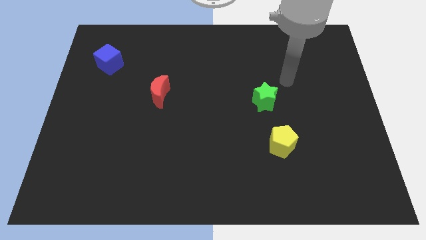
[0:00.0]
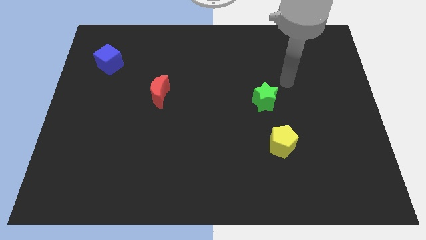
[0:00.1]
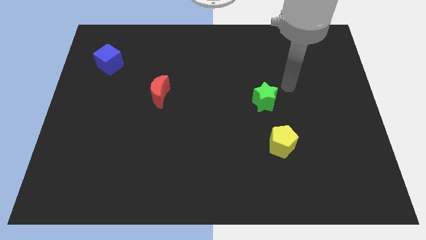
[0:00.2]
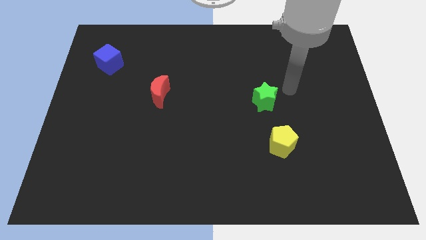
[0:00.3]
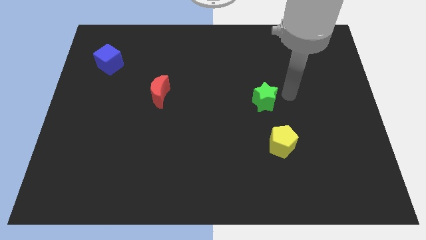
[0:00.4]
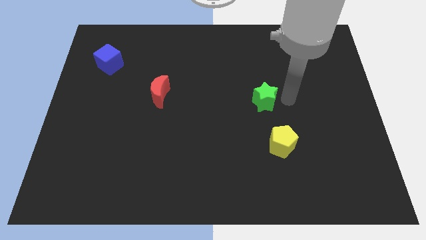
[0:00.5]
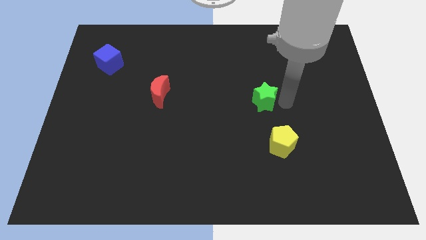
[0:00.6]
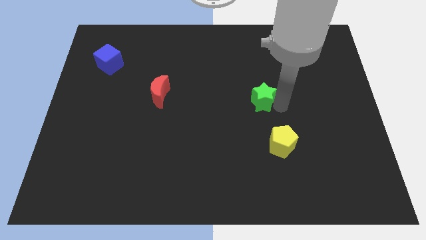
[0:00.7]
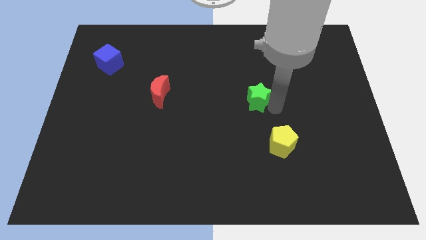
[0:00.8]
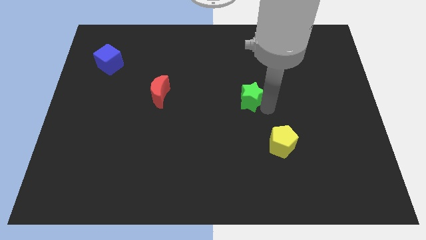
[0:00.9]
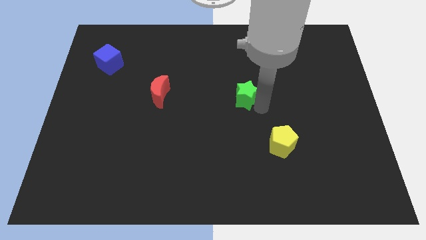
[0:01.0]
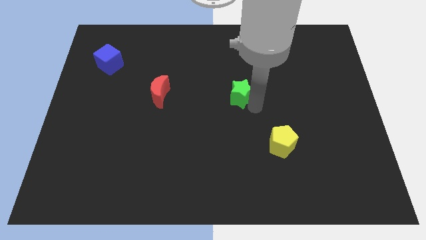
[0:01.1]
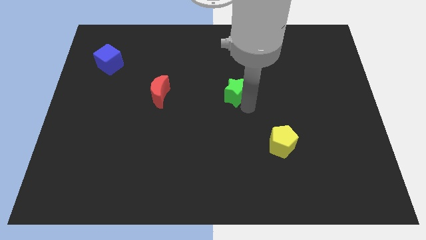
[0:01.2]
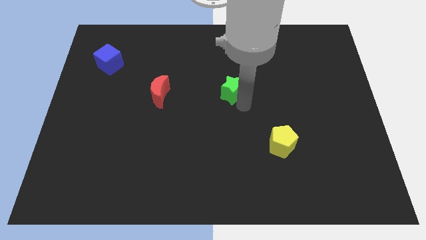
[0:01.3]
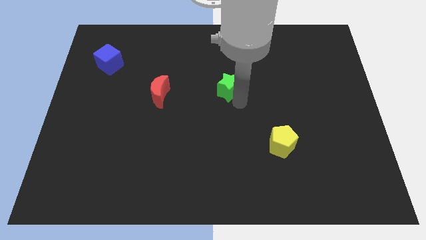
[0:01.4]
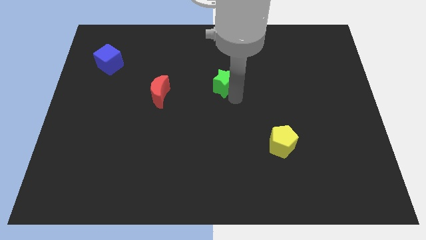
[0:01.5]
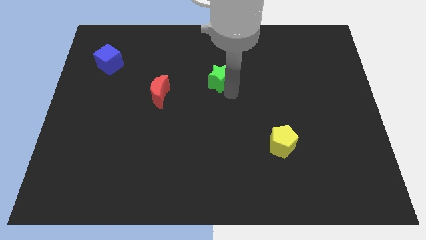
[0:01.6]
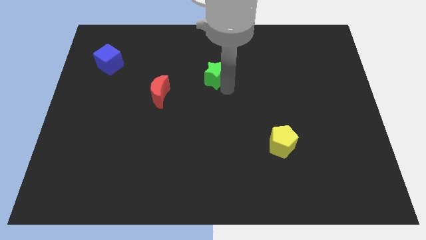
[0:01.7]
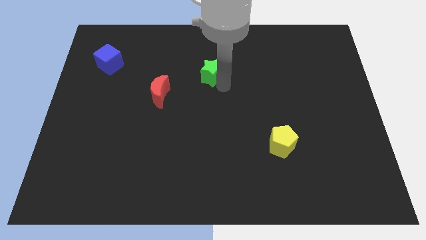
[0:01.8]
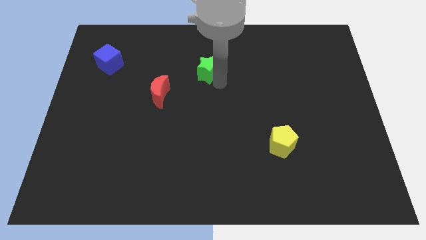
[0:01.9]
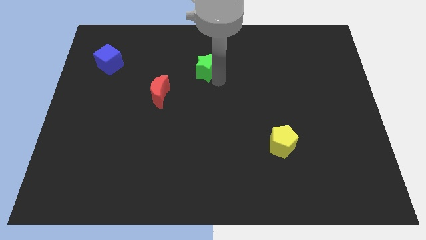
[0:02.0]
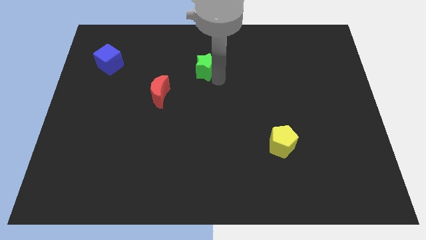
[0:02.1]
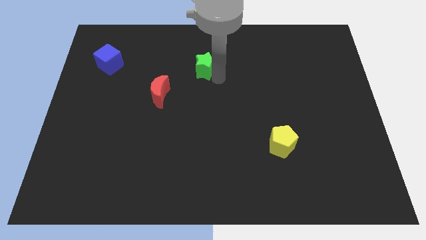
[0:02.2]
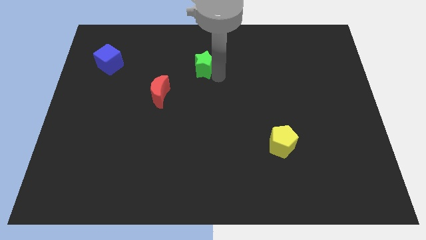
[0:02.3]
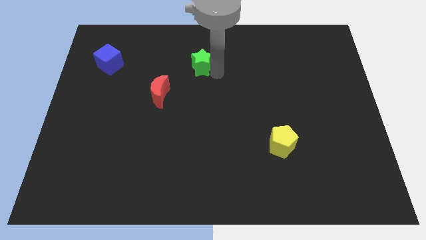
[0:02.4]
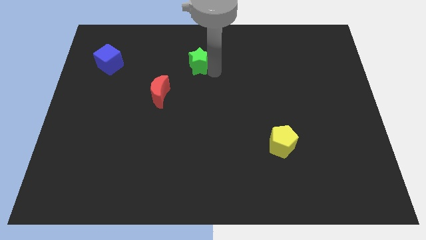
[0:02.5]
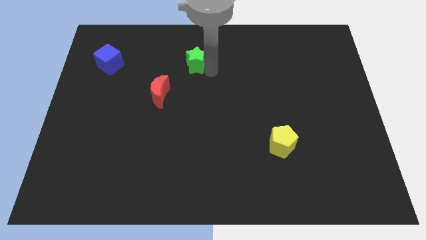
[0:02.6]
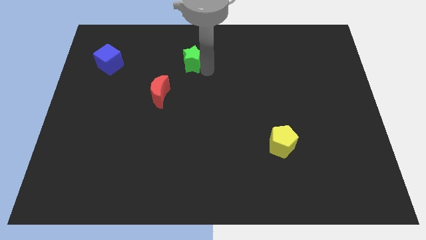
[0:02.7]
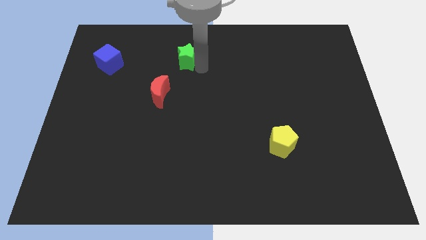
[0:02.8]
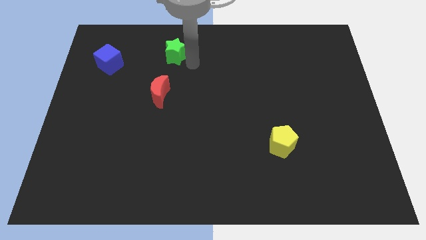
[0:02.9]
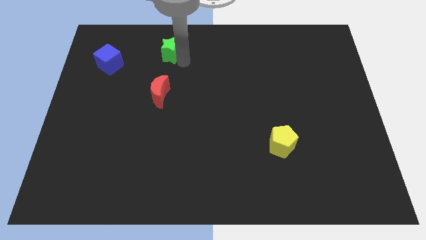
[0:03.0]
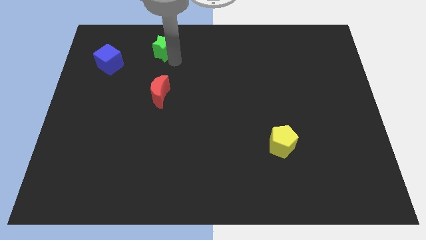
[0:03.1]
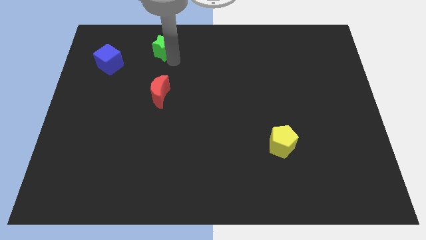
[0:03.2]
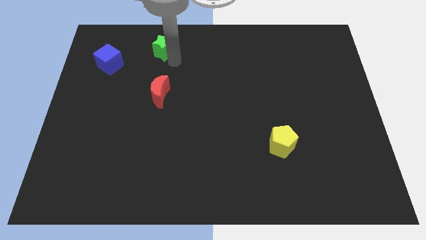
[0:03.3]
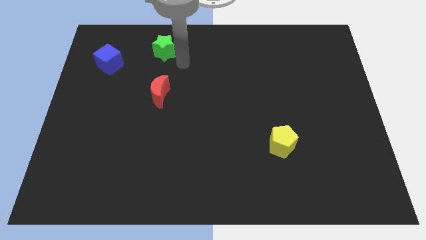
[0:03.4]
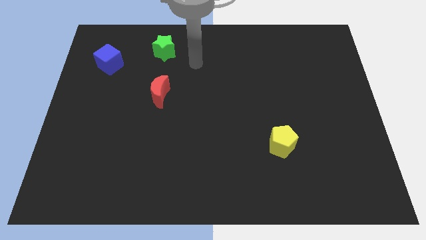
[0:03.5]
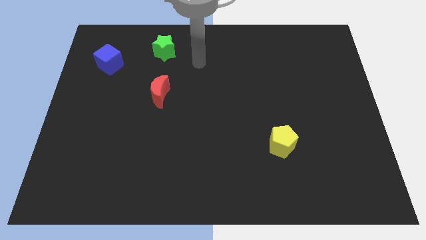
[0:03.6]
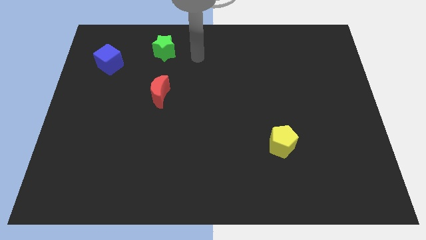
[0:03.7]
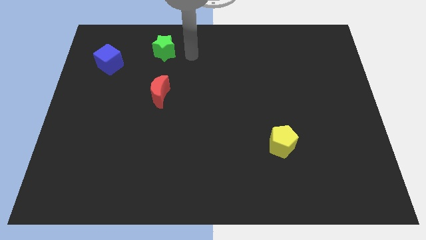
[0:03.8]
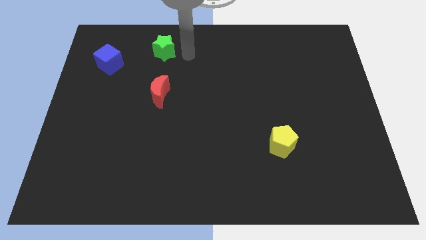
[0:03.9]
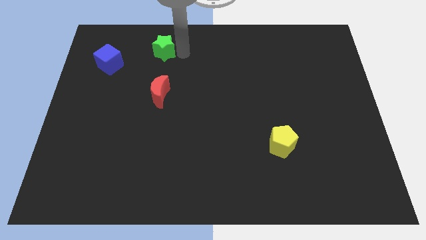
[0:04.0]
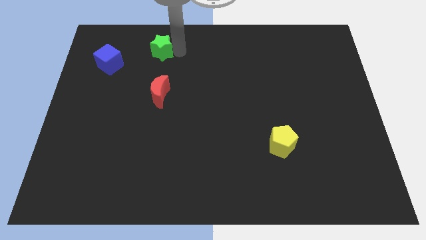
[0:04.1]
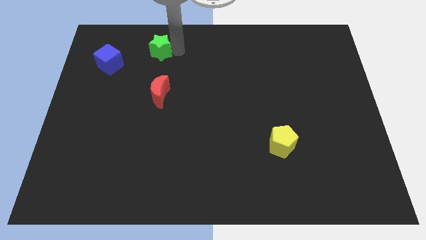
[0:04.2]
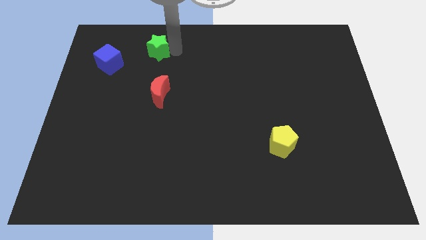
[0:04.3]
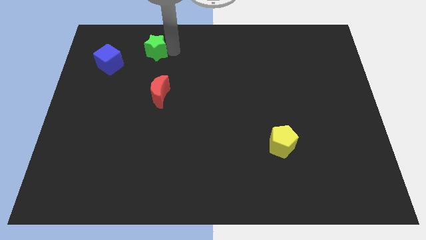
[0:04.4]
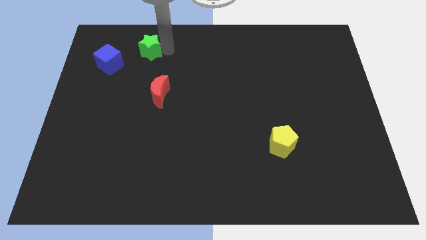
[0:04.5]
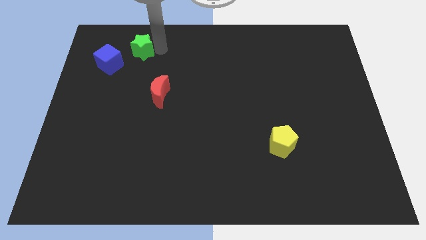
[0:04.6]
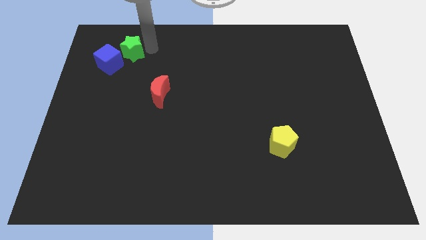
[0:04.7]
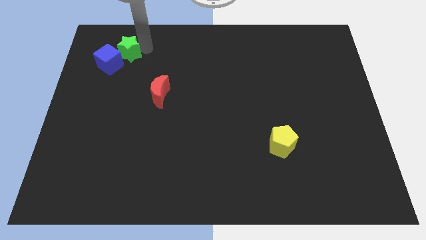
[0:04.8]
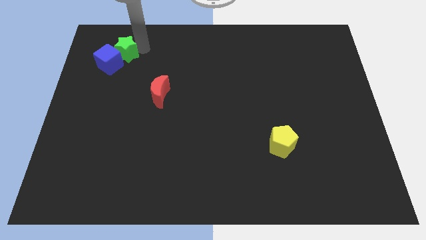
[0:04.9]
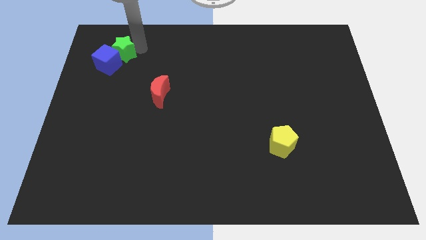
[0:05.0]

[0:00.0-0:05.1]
slide the green star towards the blue block

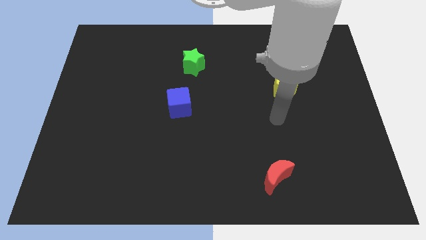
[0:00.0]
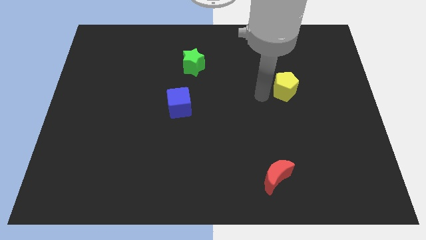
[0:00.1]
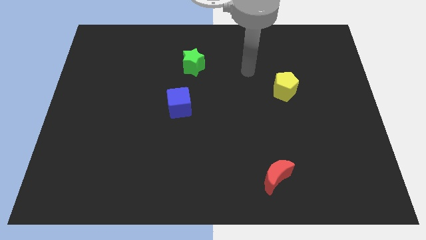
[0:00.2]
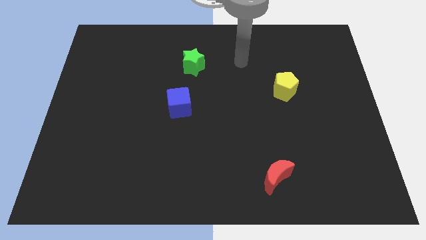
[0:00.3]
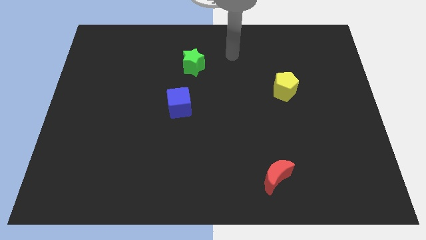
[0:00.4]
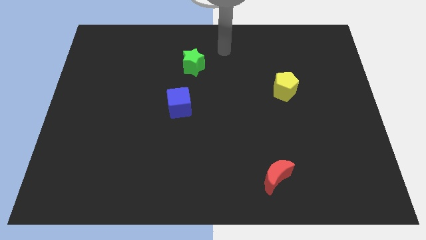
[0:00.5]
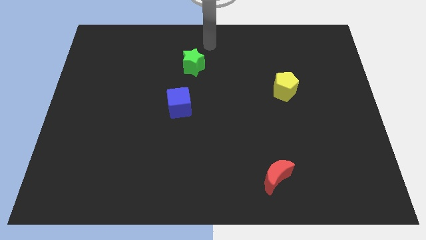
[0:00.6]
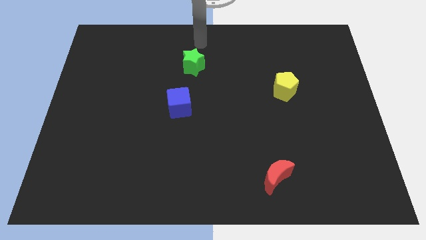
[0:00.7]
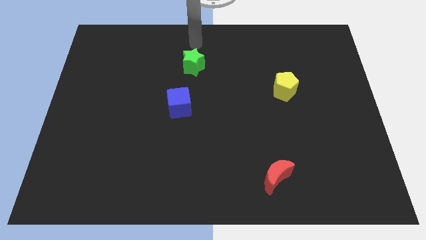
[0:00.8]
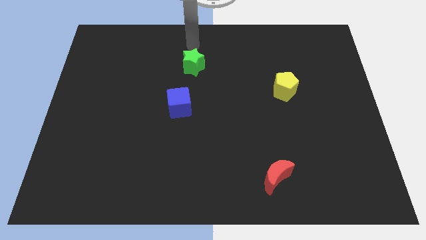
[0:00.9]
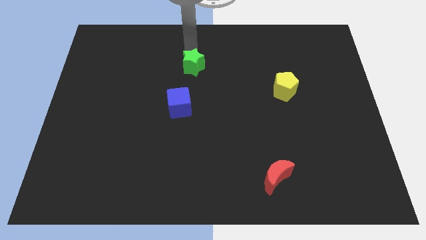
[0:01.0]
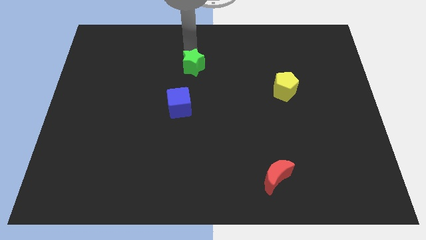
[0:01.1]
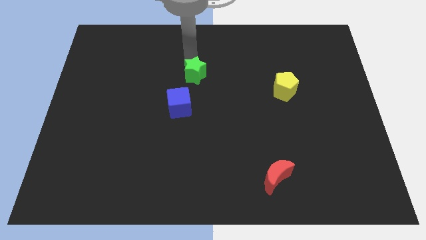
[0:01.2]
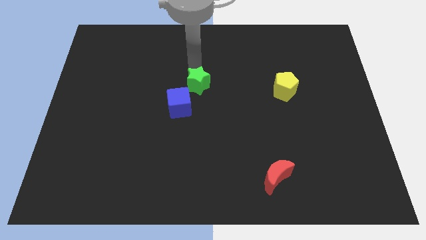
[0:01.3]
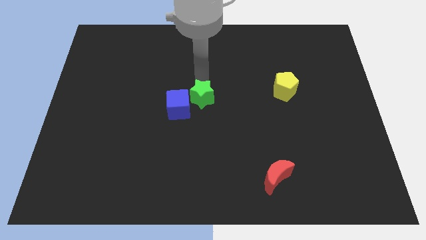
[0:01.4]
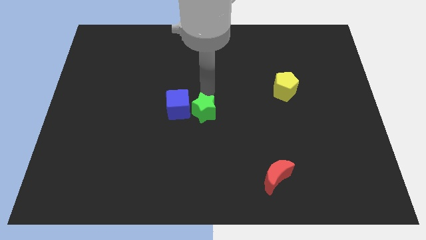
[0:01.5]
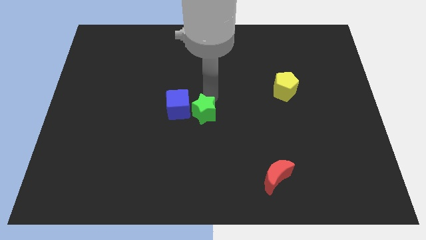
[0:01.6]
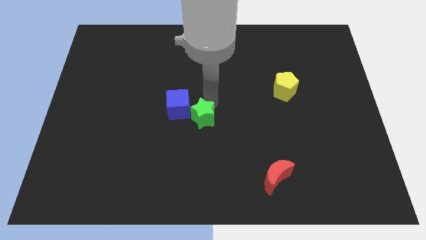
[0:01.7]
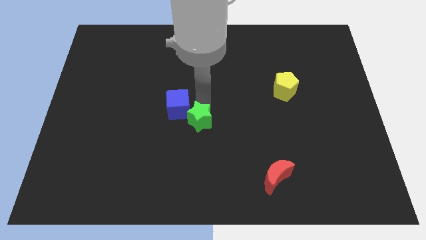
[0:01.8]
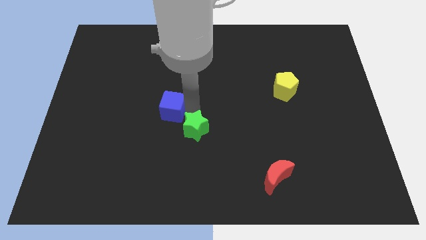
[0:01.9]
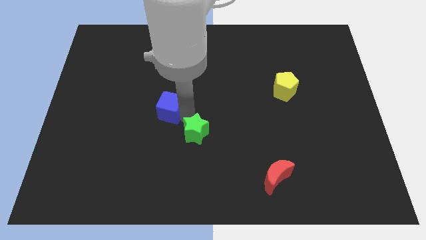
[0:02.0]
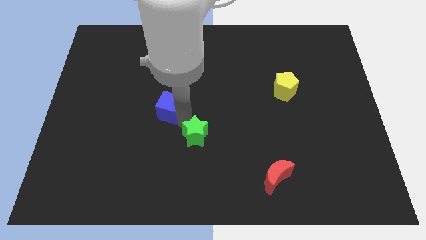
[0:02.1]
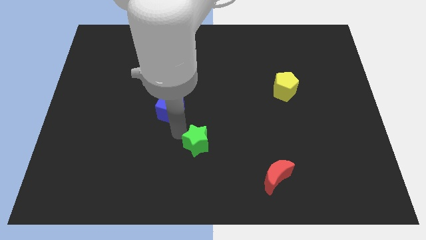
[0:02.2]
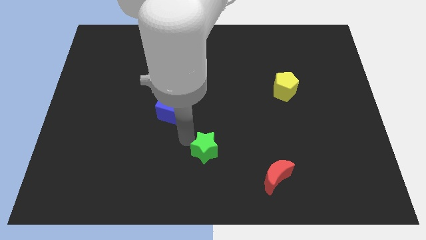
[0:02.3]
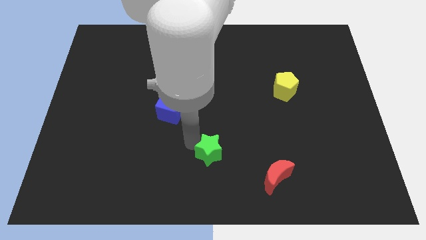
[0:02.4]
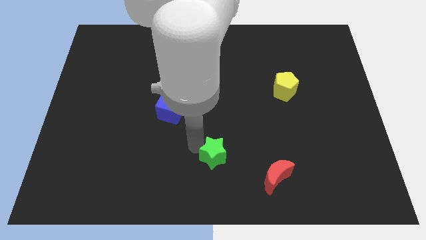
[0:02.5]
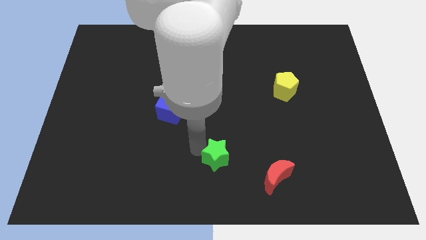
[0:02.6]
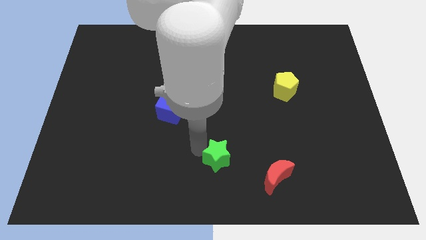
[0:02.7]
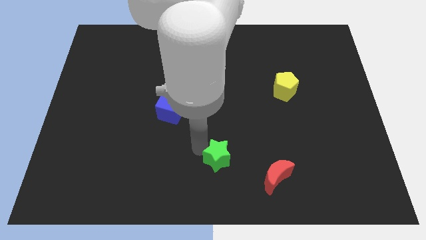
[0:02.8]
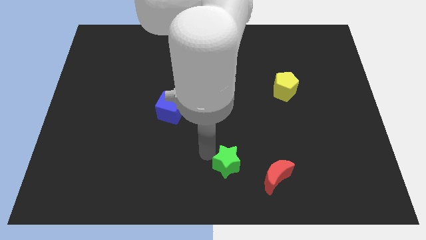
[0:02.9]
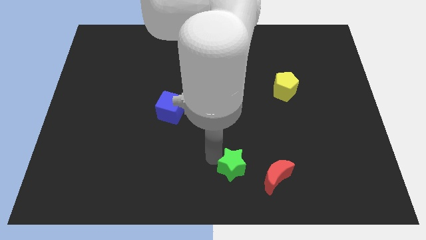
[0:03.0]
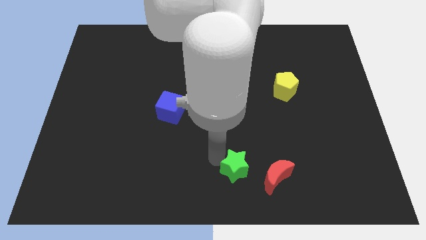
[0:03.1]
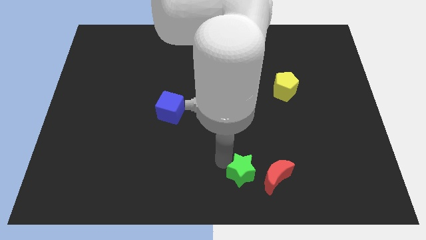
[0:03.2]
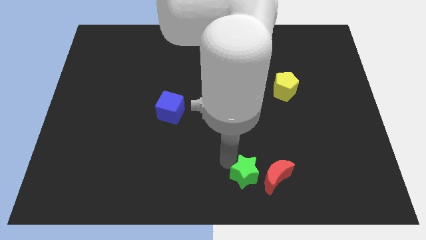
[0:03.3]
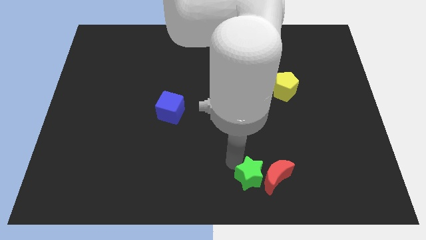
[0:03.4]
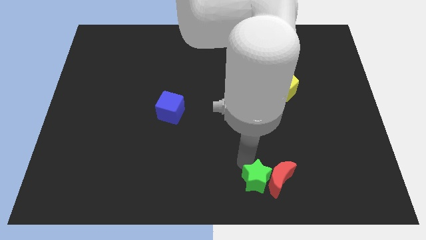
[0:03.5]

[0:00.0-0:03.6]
slide the green star next to the red block
